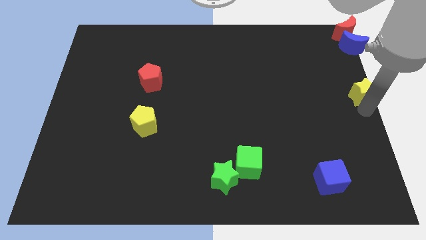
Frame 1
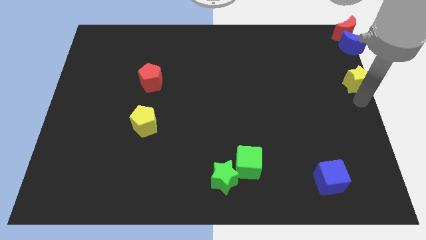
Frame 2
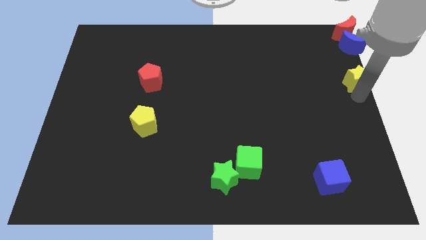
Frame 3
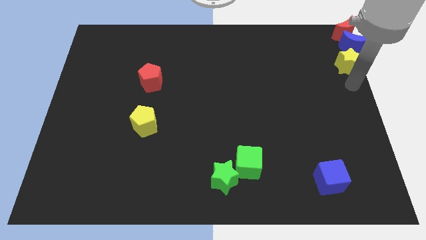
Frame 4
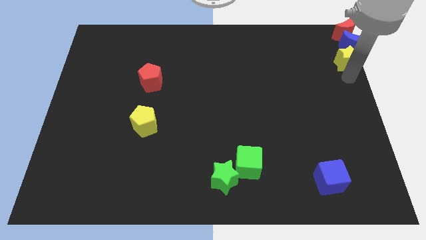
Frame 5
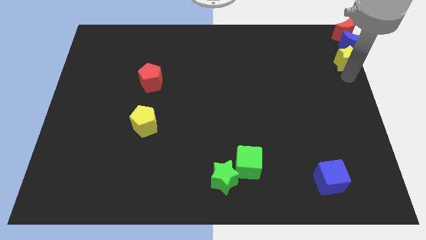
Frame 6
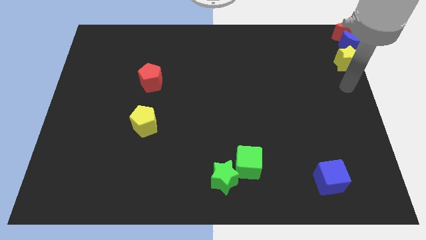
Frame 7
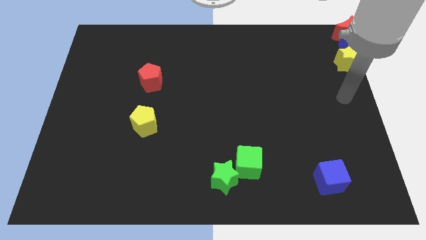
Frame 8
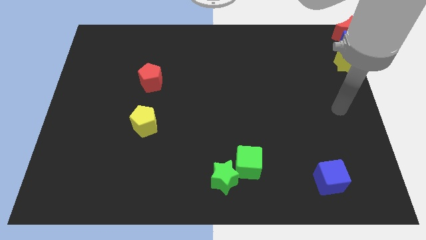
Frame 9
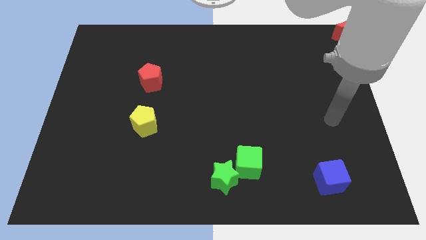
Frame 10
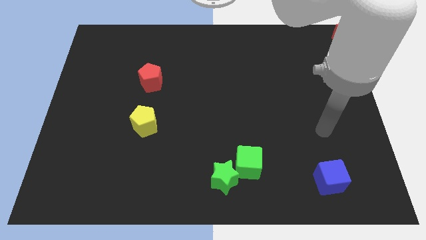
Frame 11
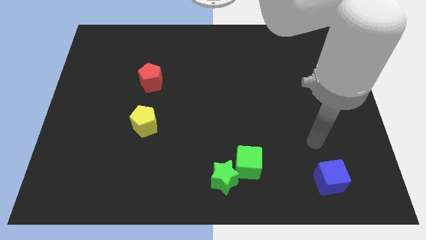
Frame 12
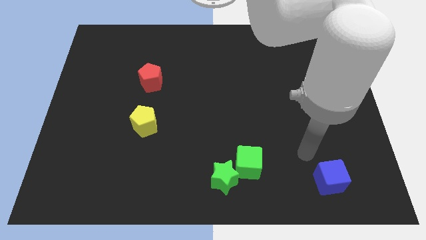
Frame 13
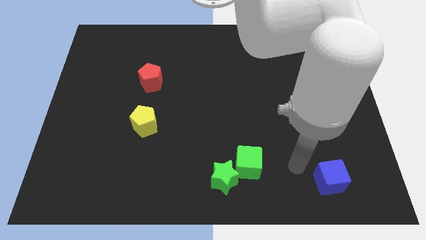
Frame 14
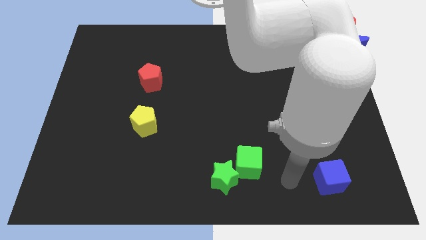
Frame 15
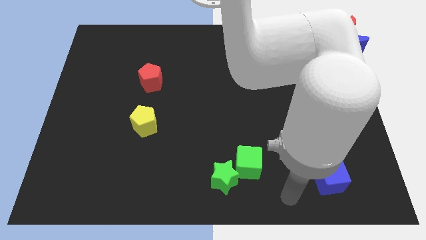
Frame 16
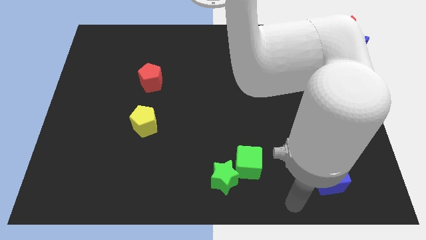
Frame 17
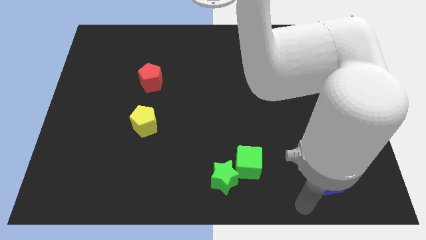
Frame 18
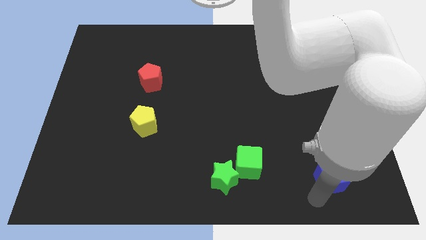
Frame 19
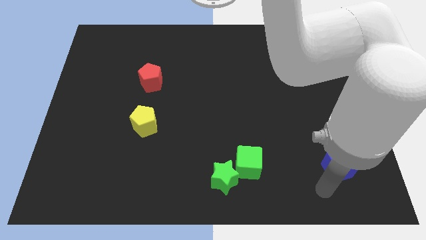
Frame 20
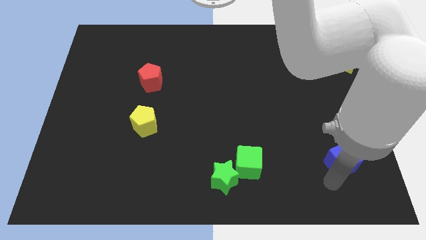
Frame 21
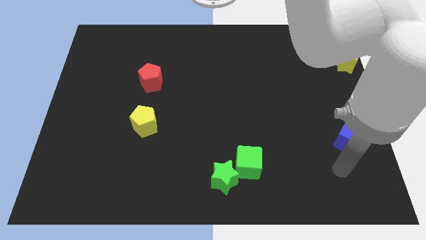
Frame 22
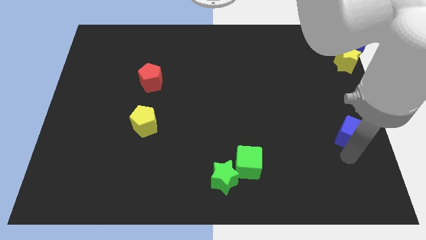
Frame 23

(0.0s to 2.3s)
place yellow star below blue moon

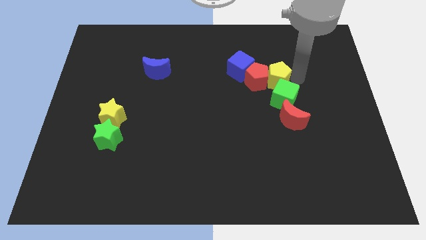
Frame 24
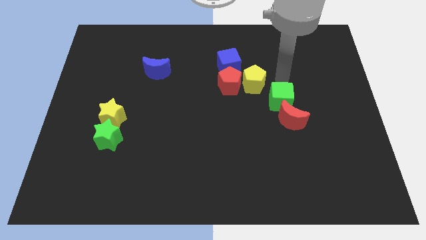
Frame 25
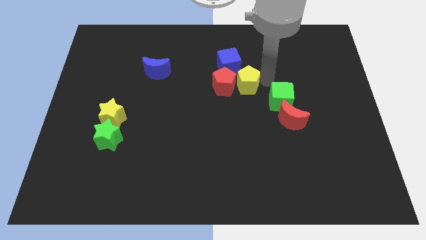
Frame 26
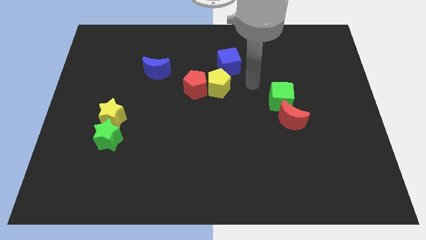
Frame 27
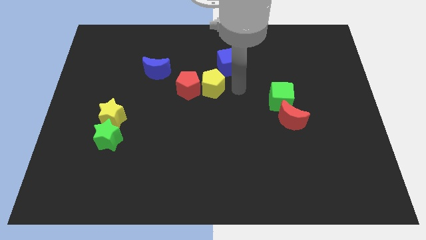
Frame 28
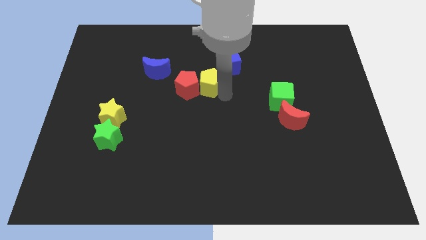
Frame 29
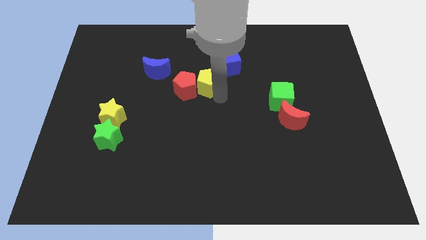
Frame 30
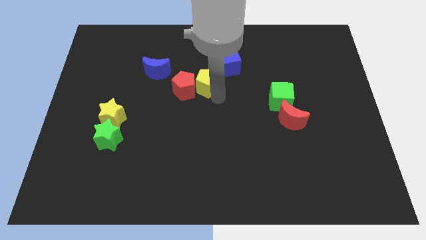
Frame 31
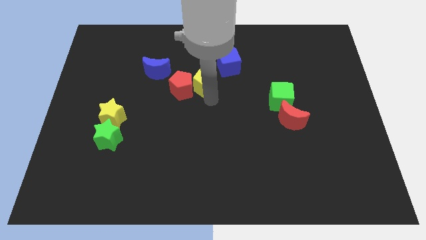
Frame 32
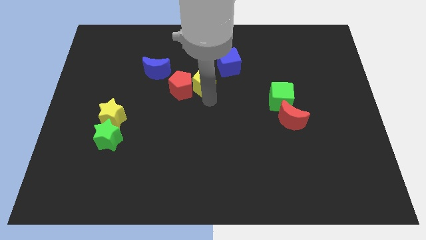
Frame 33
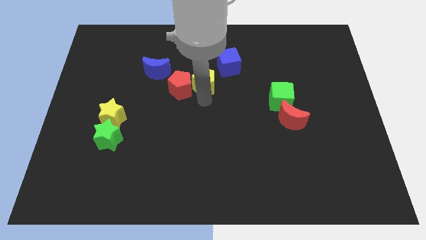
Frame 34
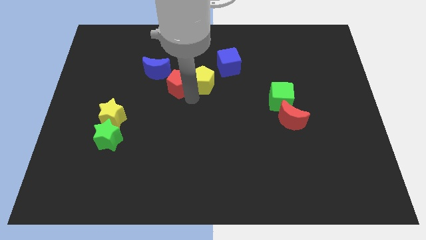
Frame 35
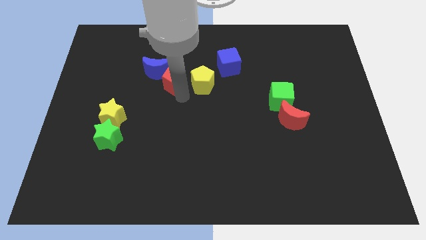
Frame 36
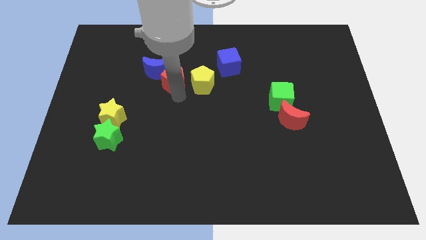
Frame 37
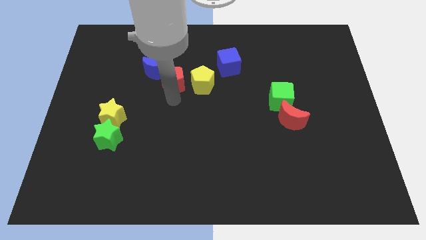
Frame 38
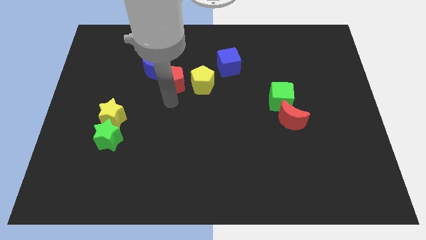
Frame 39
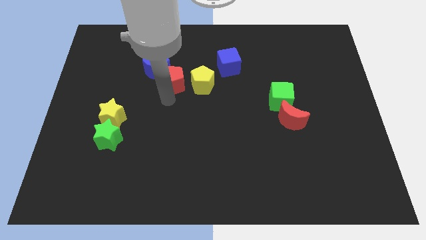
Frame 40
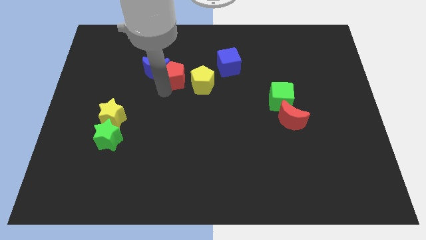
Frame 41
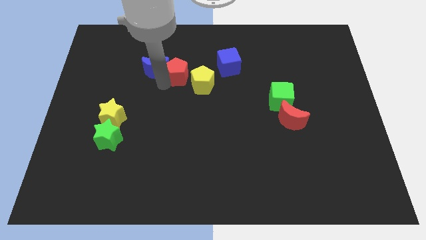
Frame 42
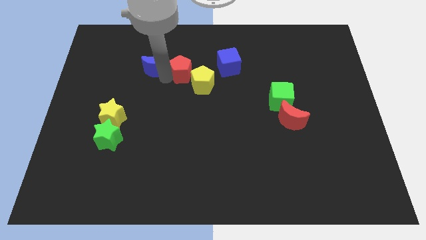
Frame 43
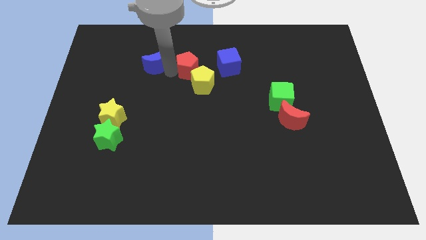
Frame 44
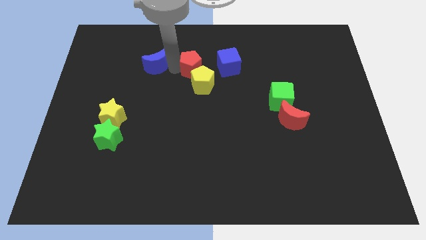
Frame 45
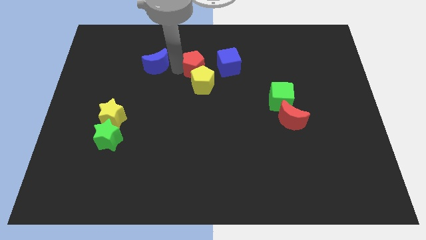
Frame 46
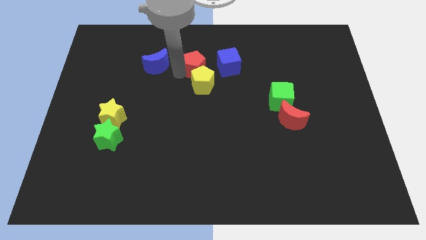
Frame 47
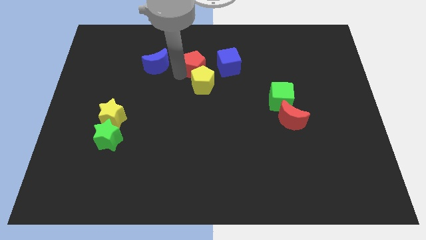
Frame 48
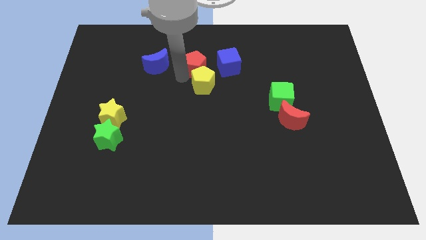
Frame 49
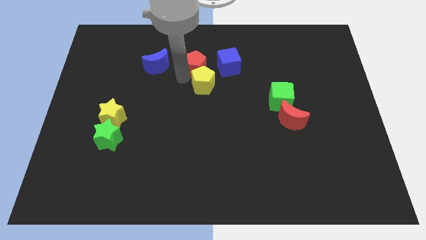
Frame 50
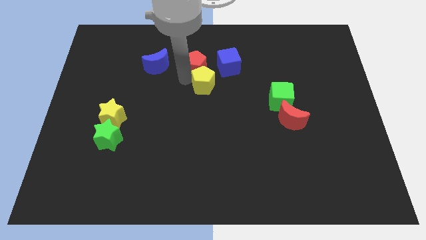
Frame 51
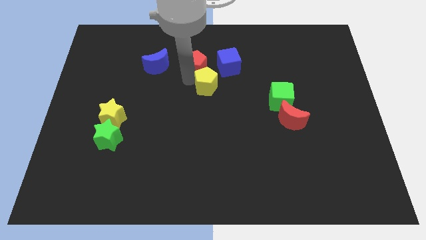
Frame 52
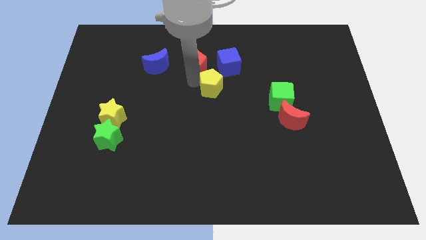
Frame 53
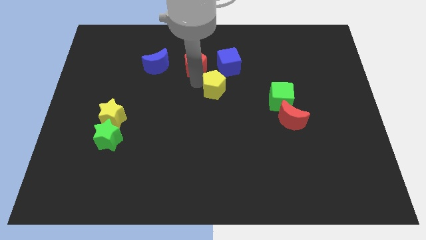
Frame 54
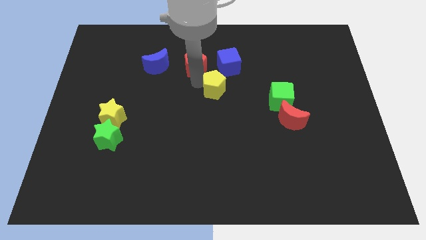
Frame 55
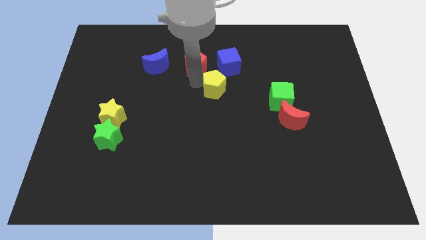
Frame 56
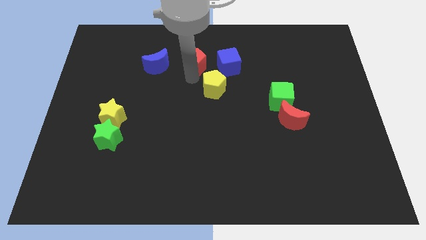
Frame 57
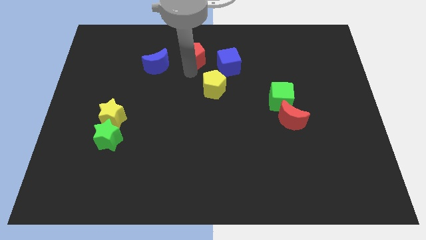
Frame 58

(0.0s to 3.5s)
place both the pentagons close to the blue cube to form a triangle

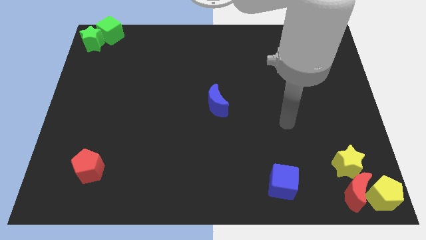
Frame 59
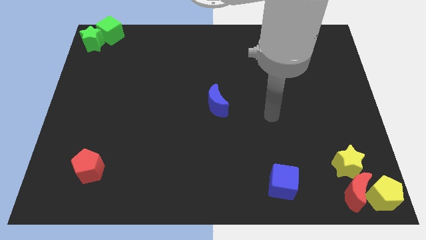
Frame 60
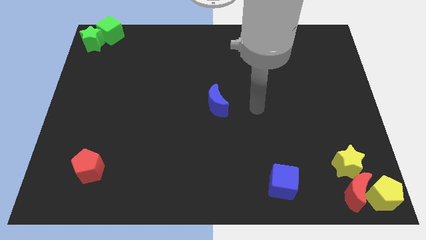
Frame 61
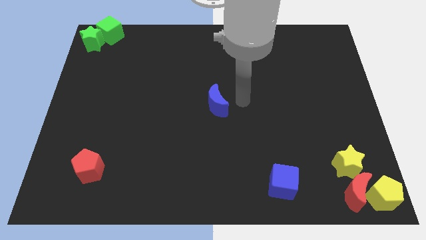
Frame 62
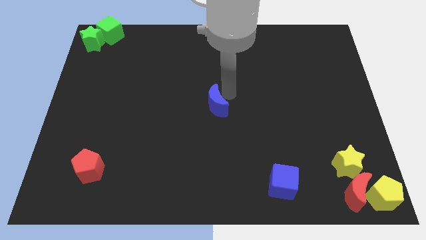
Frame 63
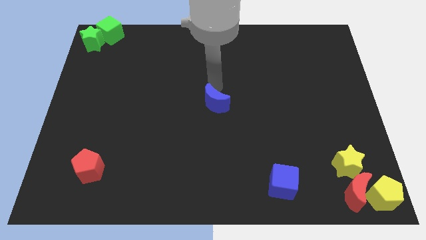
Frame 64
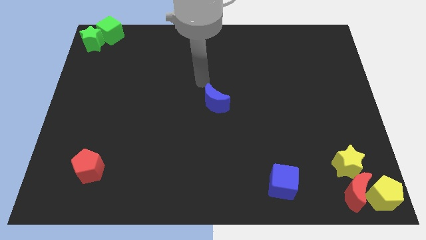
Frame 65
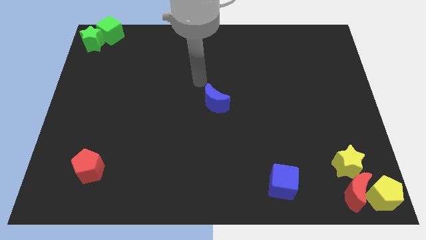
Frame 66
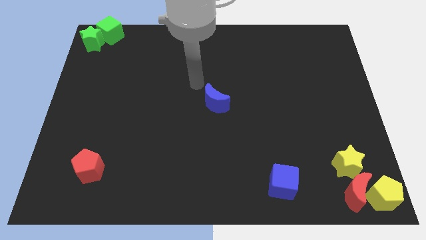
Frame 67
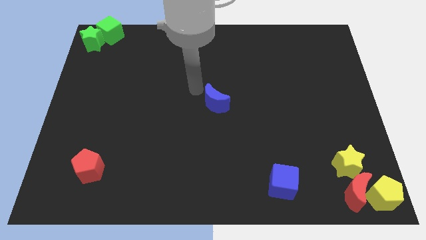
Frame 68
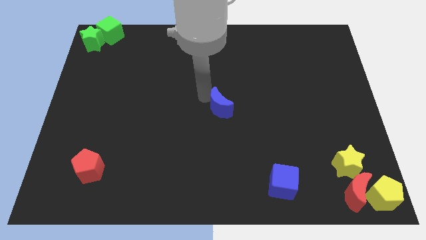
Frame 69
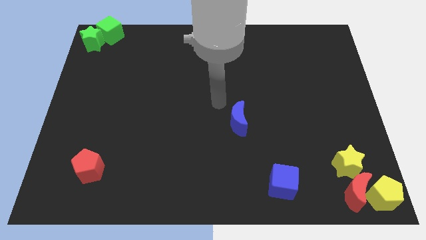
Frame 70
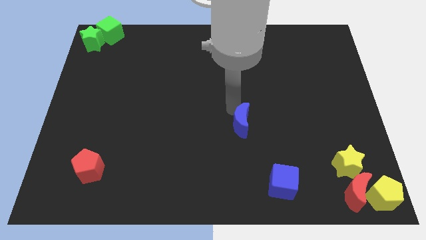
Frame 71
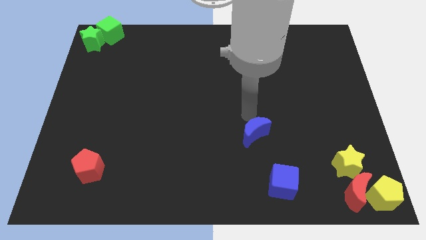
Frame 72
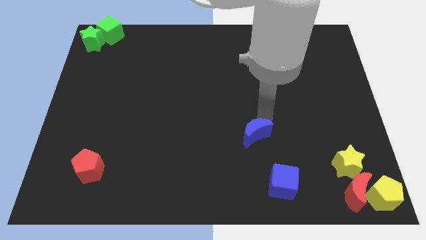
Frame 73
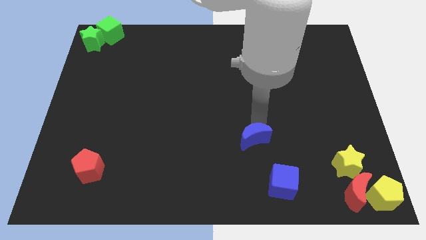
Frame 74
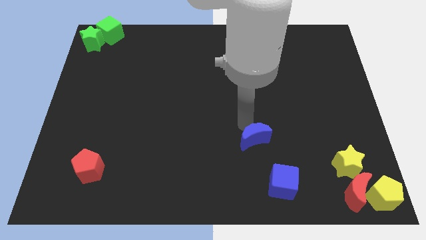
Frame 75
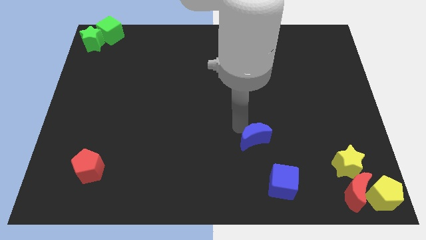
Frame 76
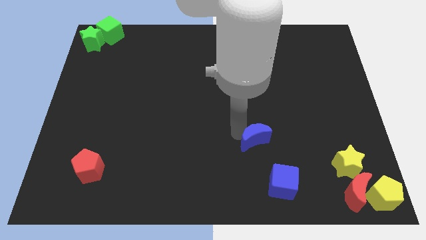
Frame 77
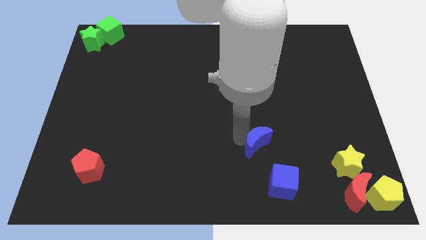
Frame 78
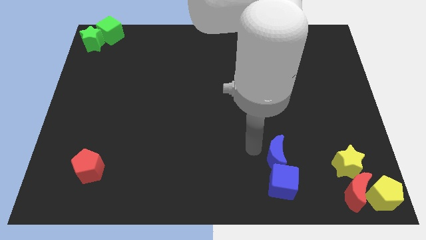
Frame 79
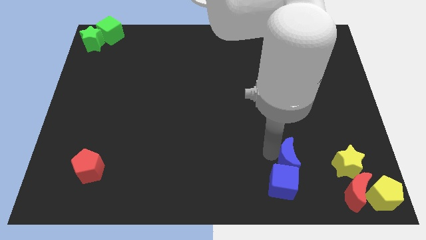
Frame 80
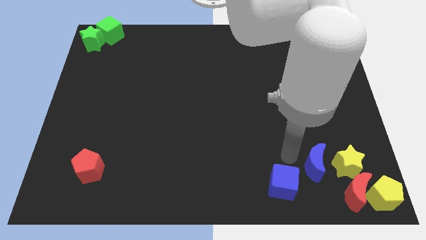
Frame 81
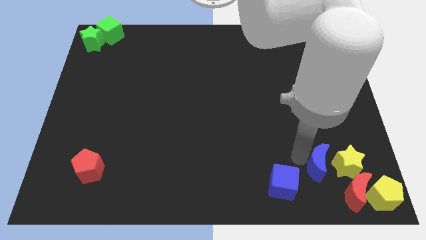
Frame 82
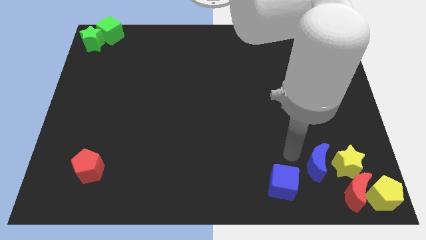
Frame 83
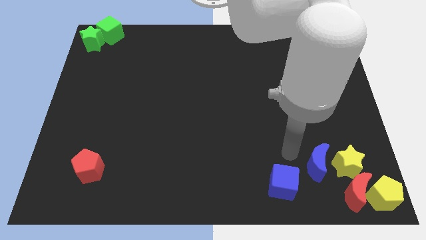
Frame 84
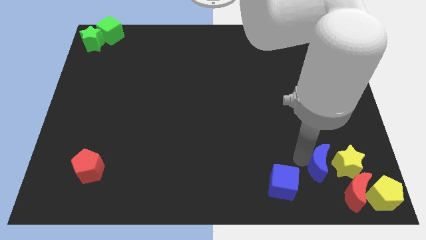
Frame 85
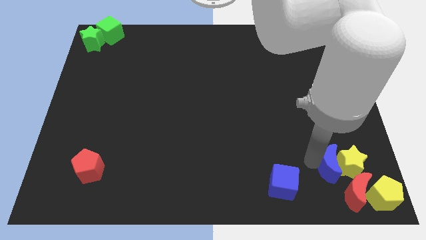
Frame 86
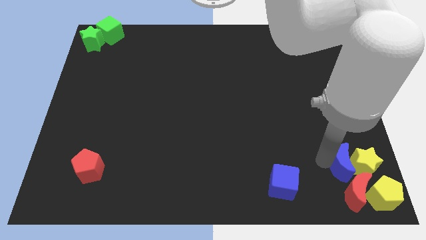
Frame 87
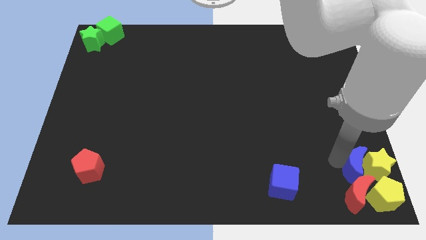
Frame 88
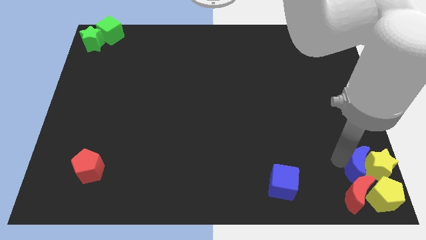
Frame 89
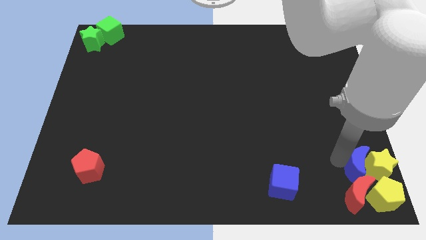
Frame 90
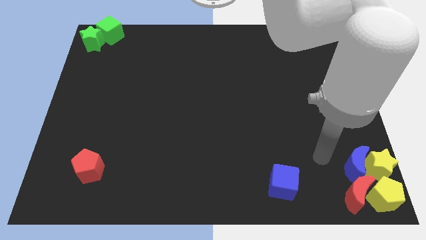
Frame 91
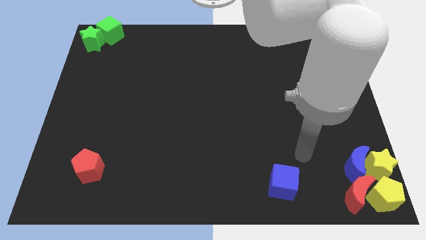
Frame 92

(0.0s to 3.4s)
push the blue moon into the yellow star
